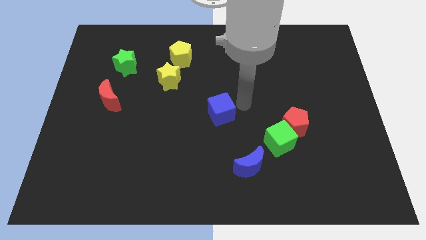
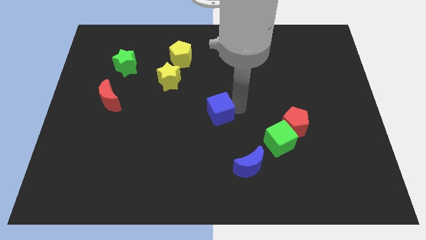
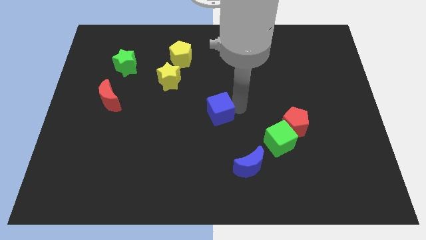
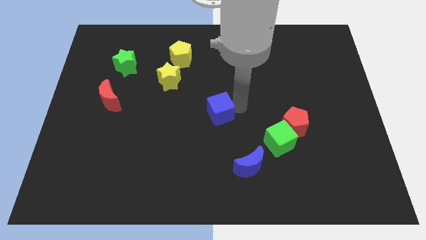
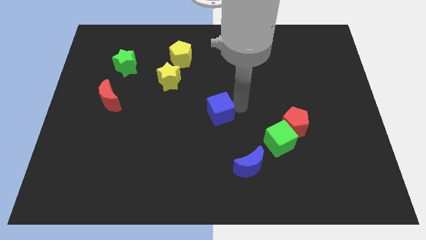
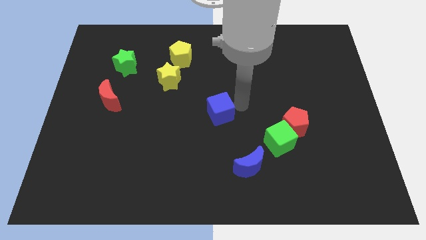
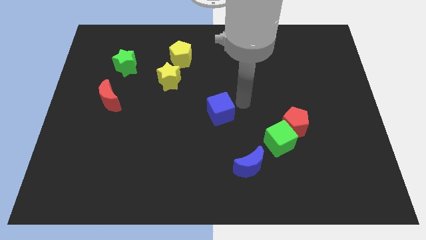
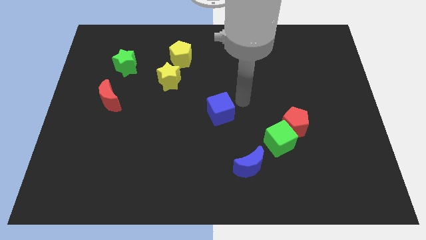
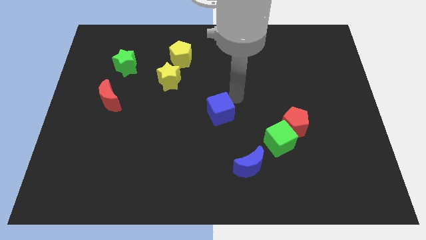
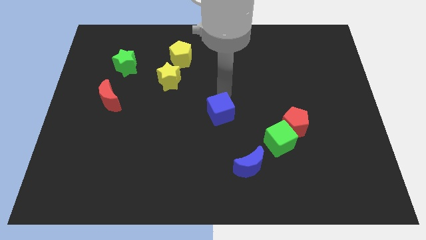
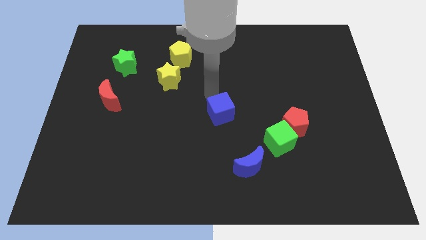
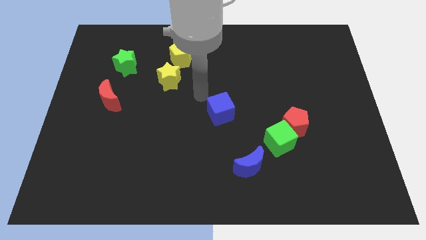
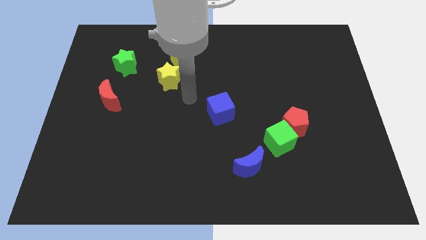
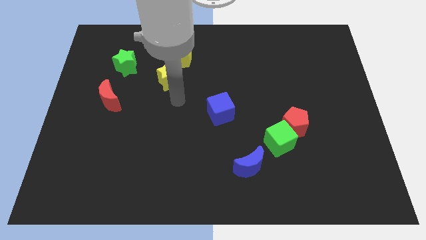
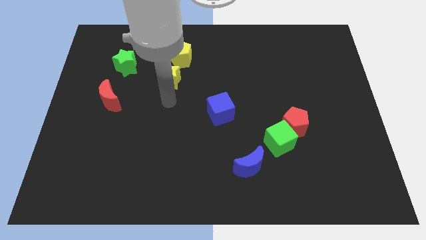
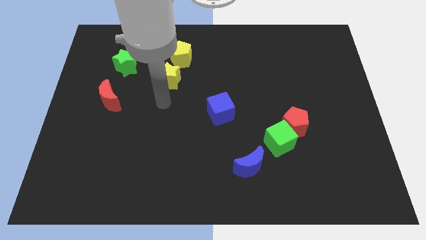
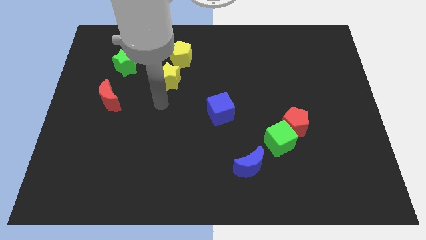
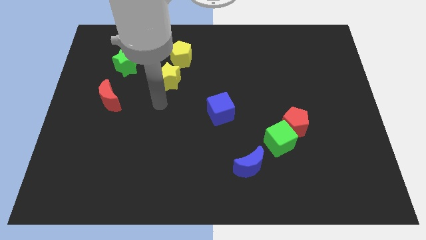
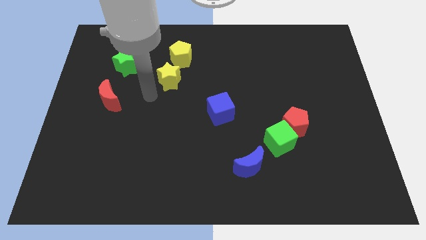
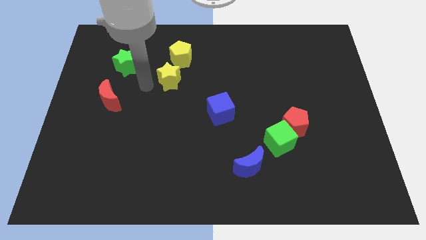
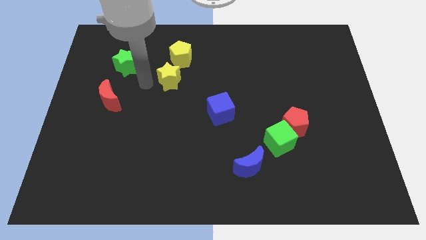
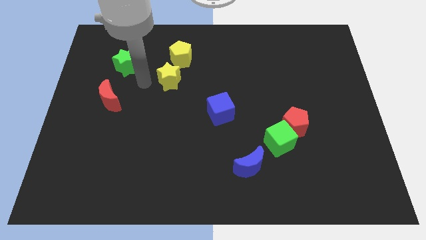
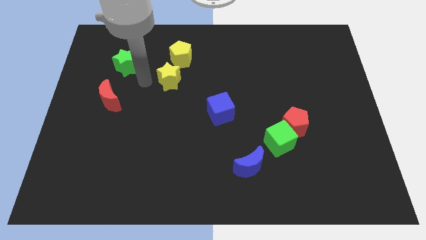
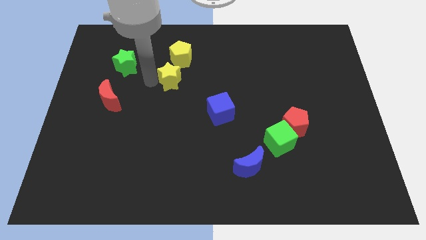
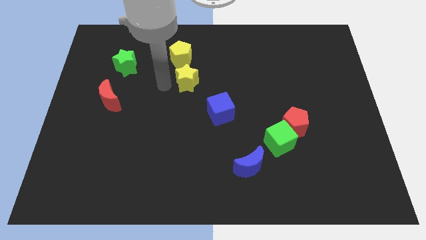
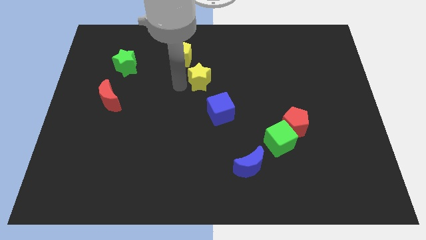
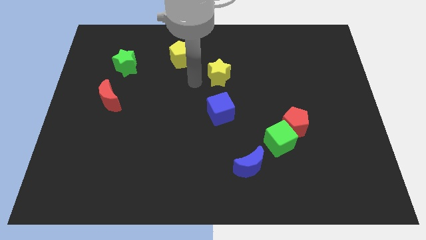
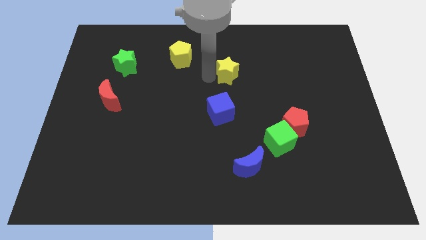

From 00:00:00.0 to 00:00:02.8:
place the yellow star above the blue cube

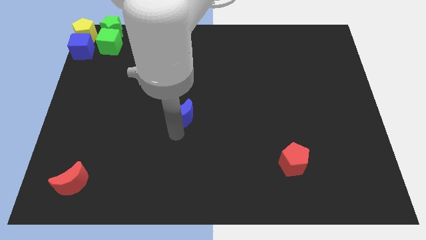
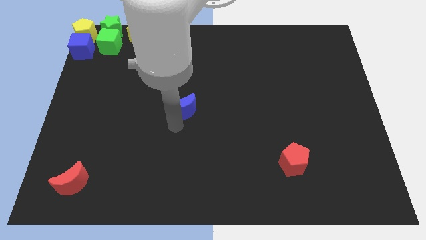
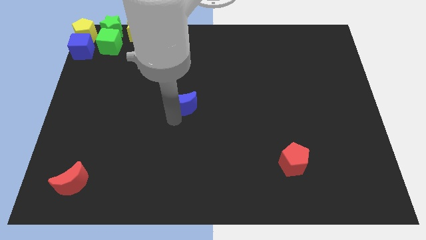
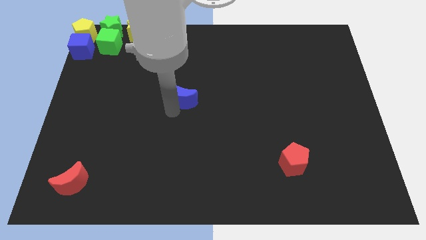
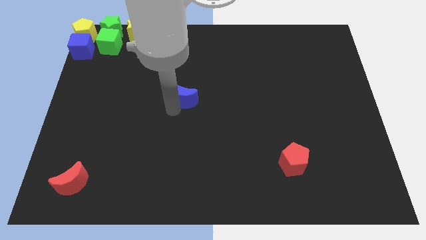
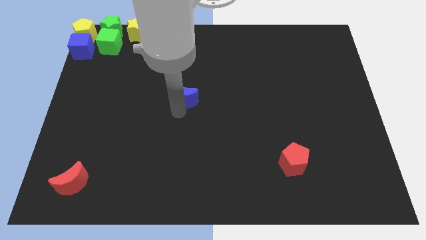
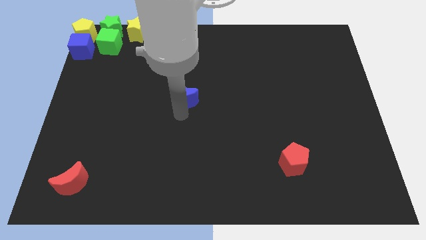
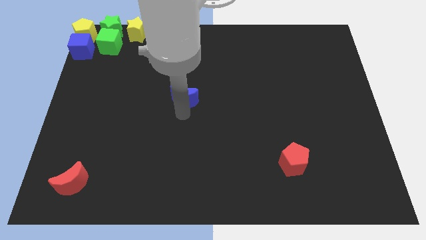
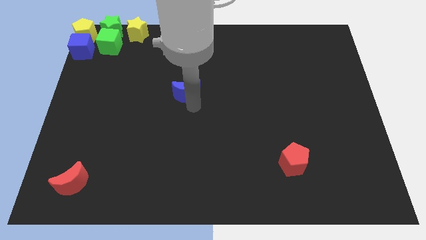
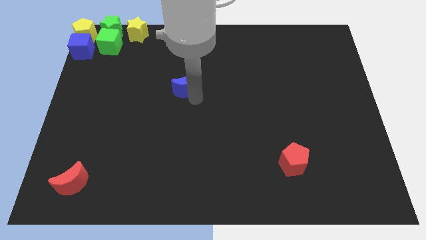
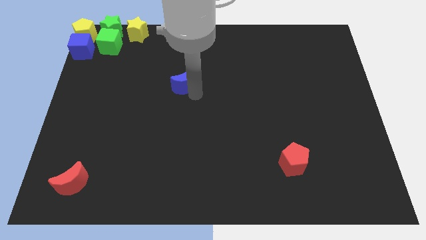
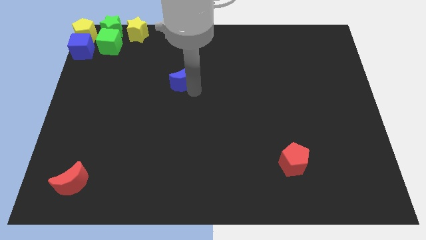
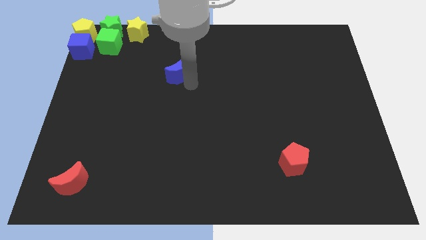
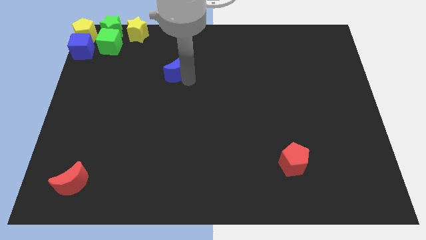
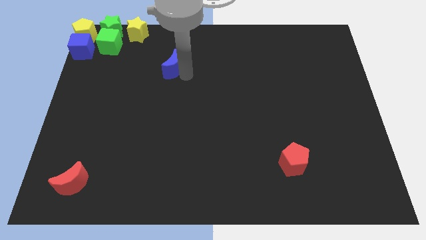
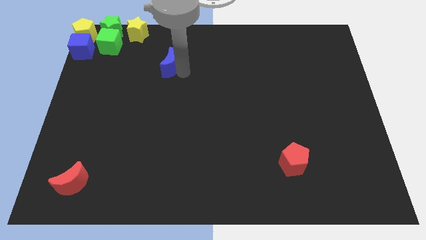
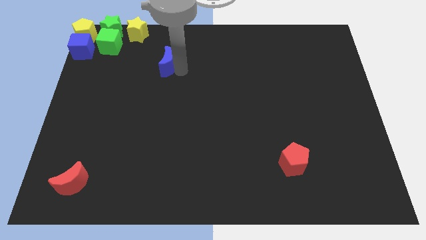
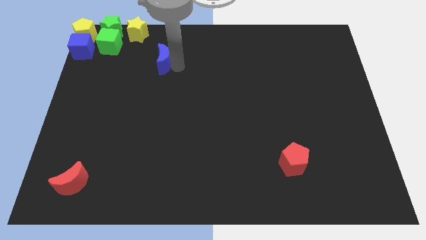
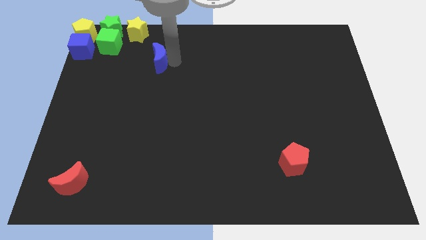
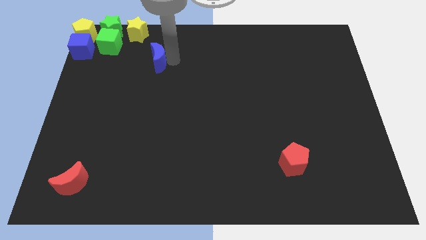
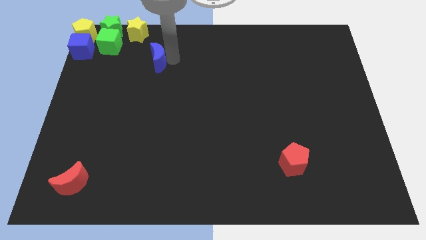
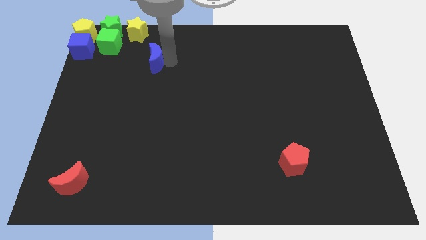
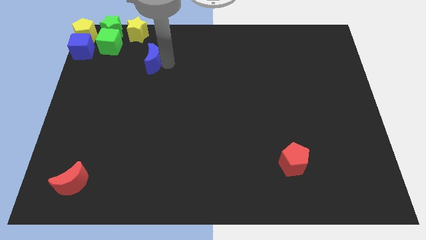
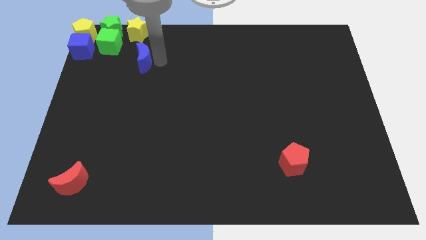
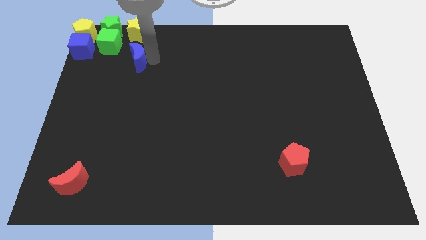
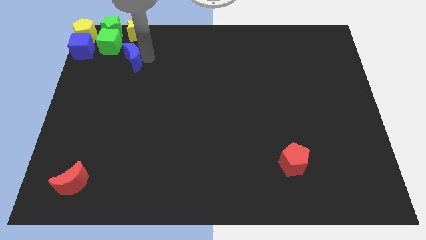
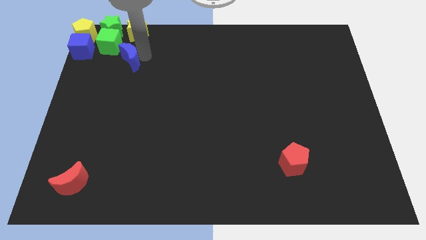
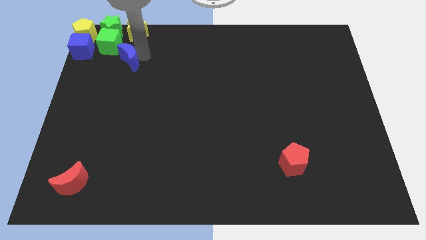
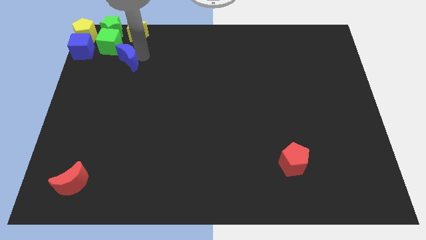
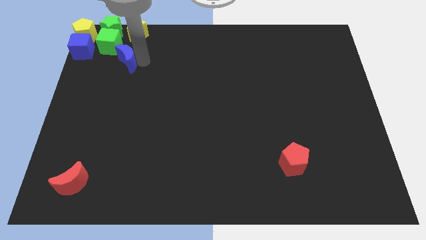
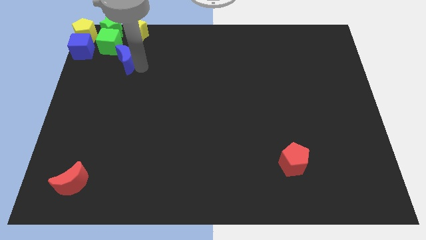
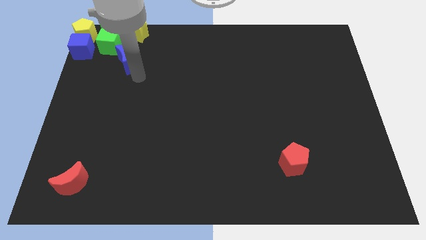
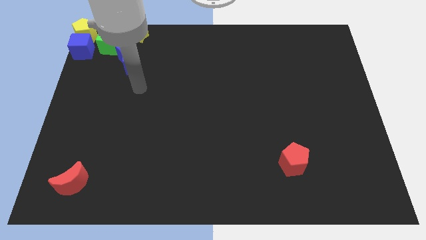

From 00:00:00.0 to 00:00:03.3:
push the blue crescent to the bottom right to the green cube

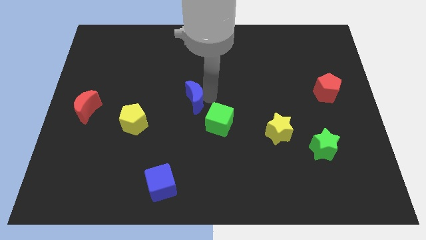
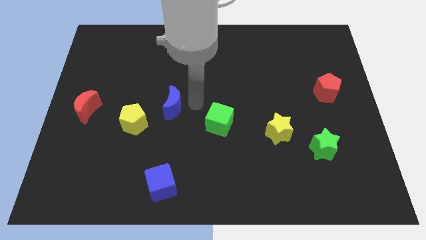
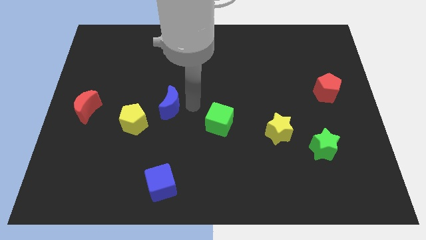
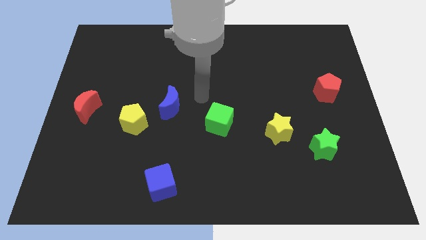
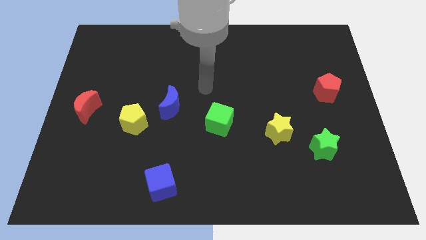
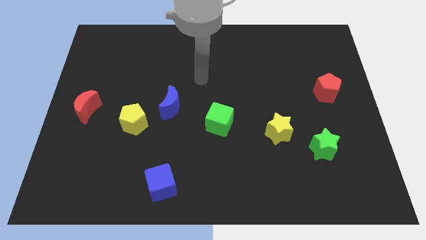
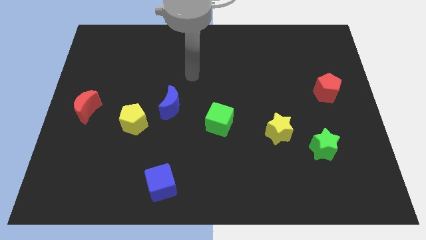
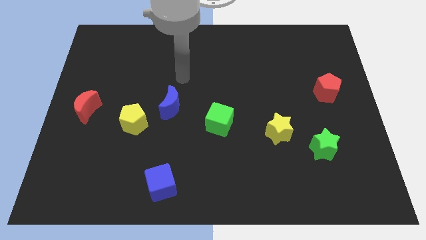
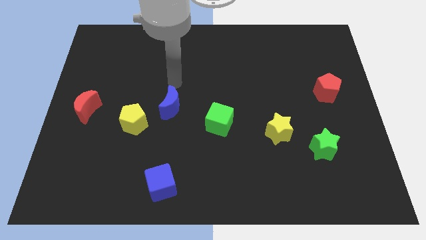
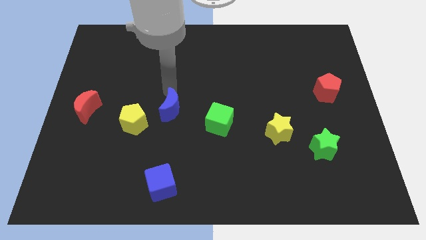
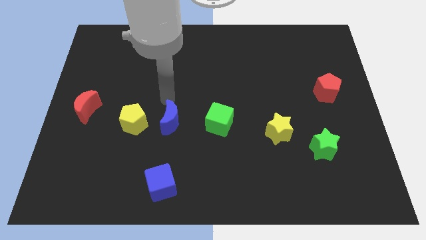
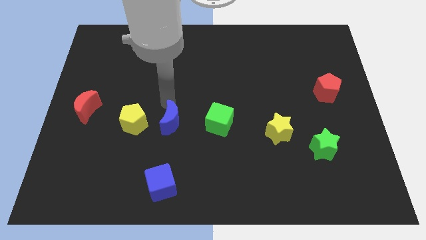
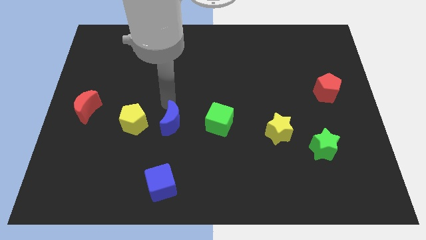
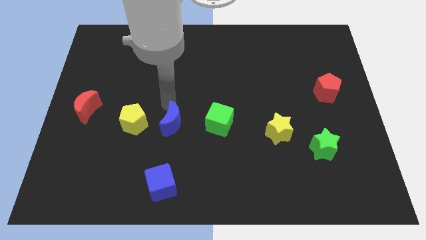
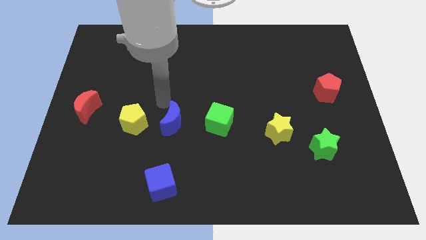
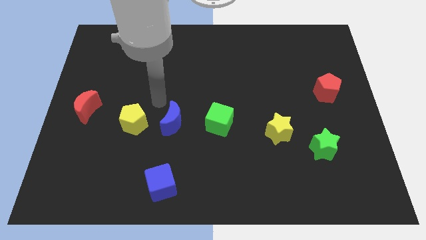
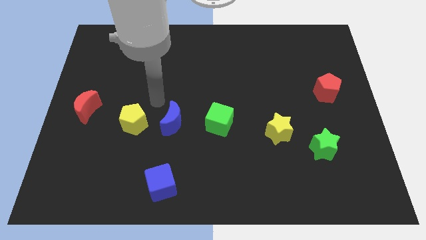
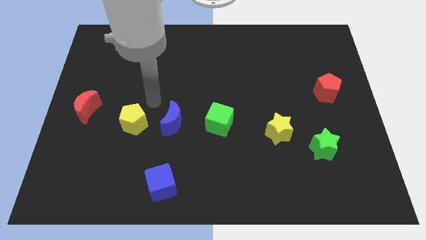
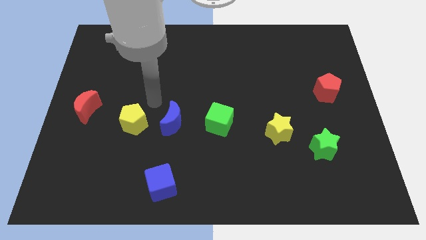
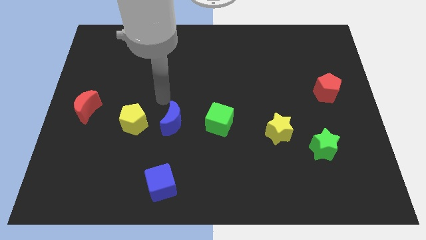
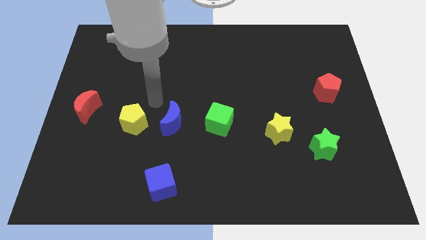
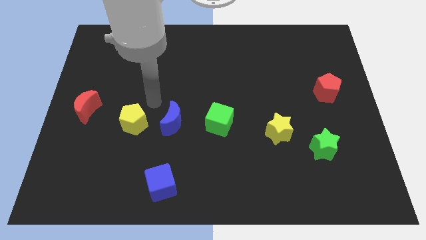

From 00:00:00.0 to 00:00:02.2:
push blue crescent towards the yellow pentagon

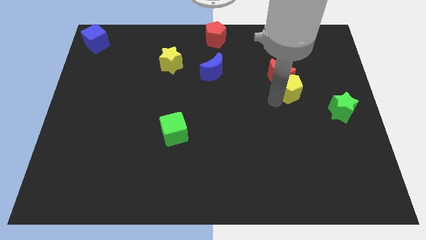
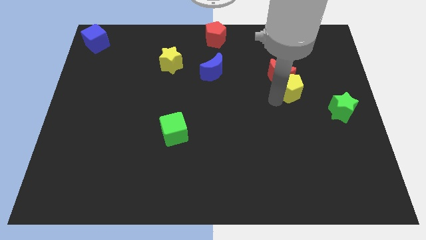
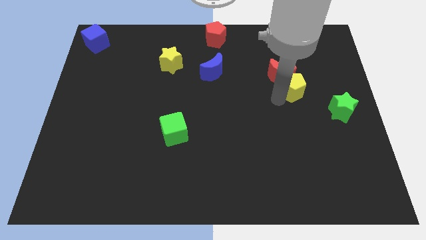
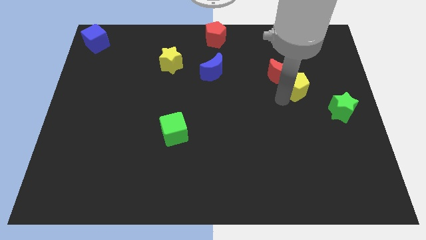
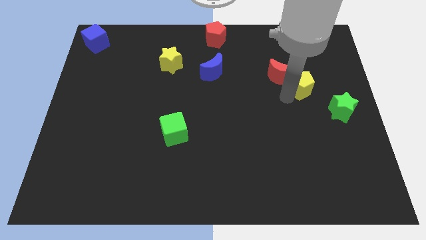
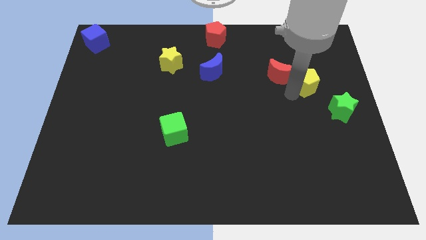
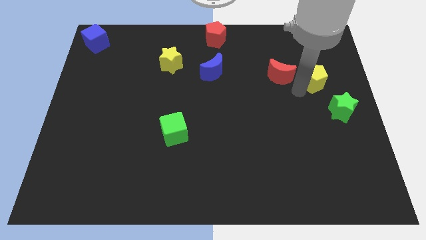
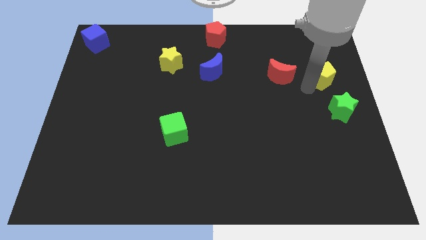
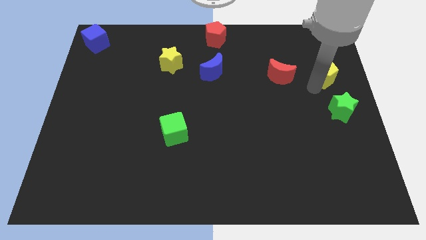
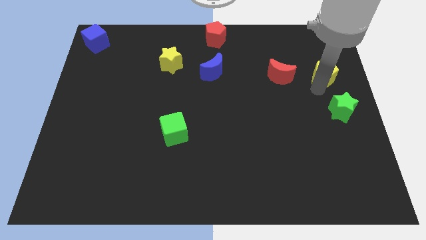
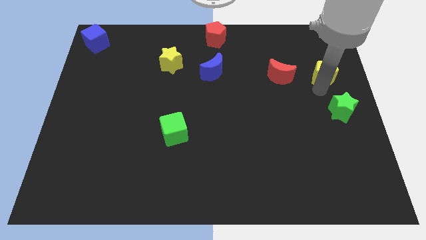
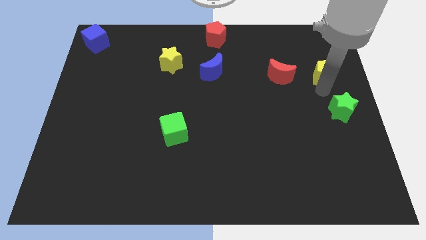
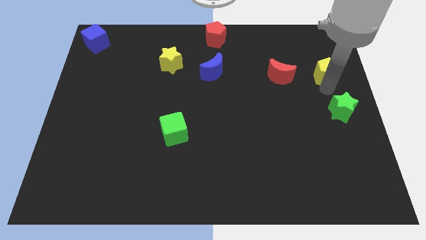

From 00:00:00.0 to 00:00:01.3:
push the yellow pentagon towards the top right
